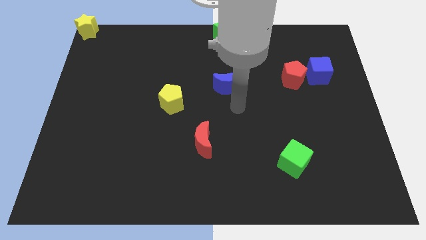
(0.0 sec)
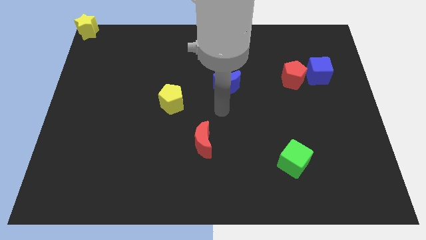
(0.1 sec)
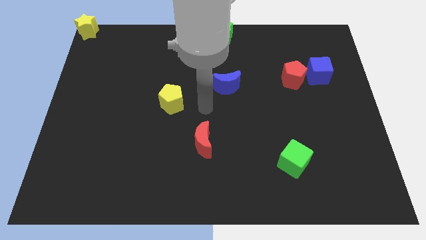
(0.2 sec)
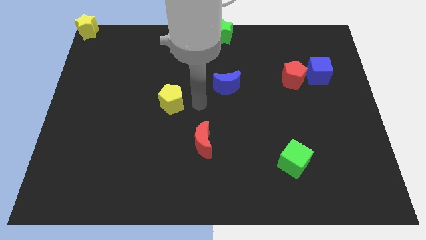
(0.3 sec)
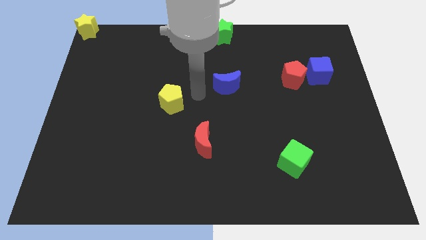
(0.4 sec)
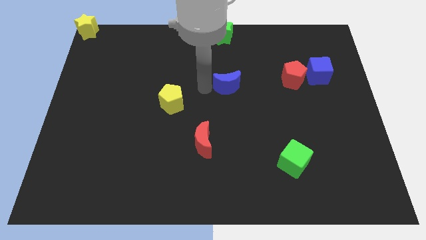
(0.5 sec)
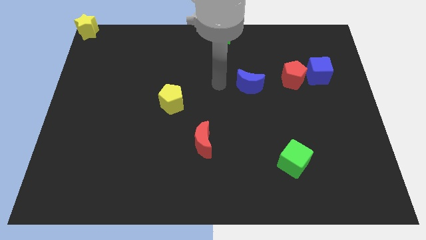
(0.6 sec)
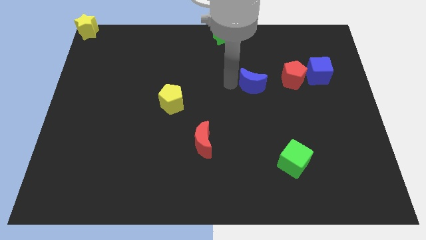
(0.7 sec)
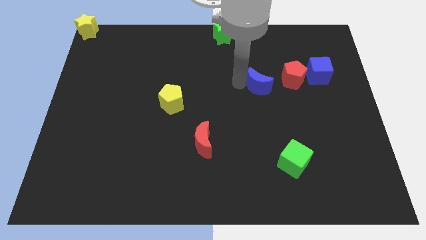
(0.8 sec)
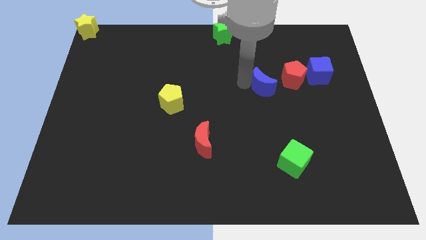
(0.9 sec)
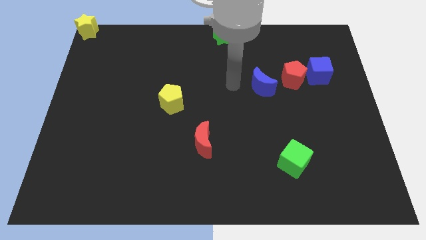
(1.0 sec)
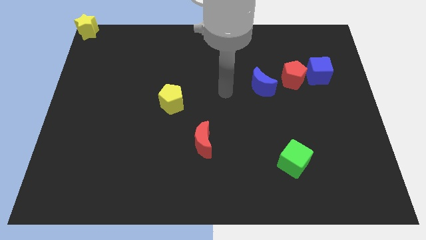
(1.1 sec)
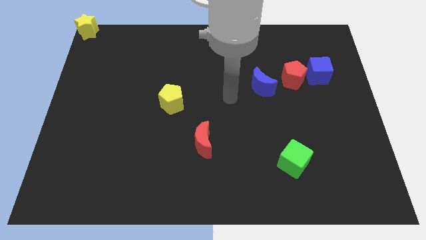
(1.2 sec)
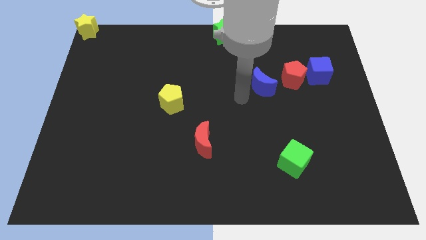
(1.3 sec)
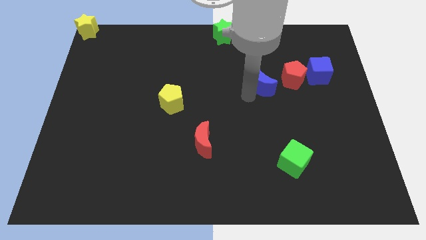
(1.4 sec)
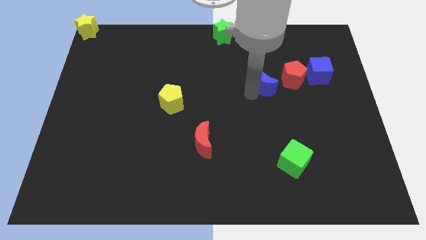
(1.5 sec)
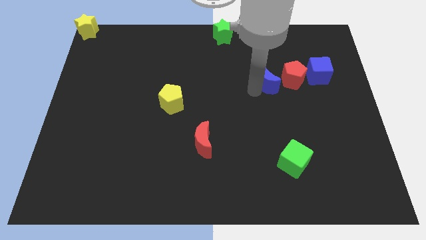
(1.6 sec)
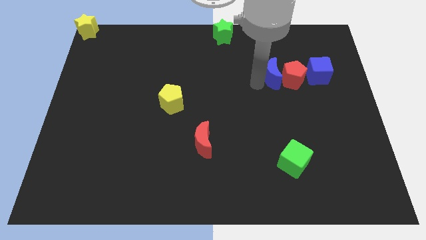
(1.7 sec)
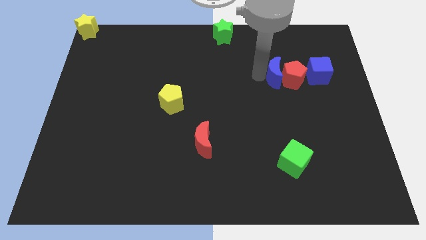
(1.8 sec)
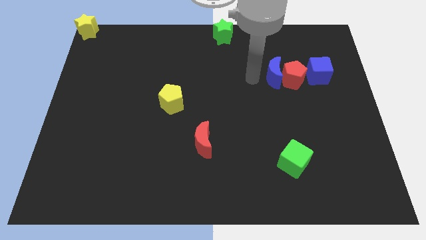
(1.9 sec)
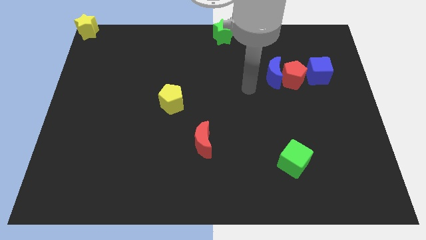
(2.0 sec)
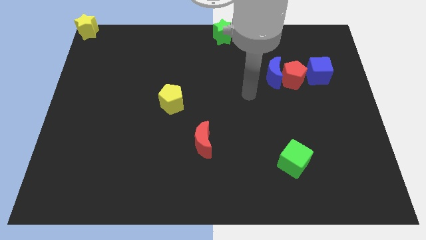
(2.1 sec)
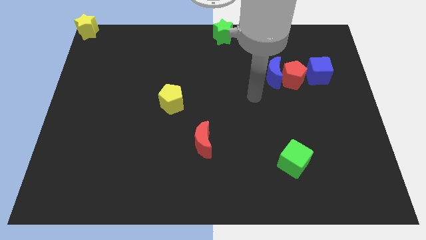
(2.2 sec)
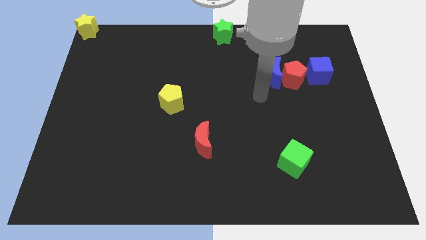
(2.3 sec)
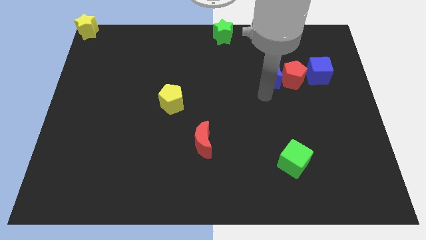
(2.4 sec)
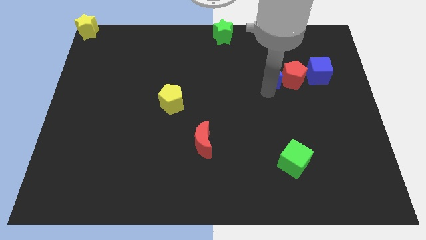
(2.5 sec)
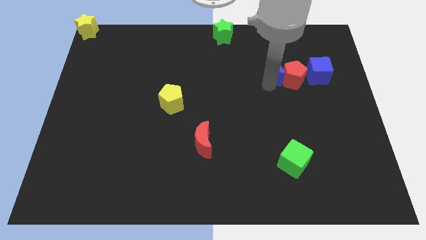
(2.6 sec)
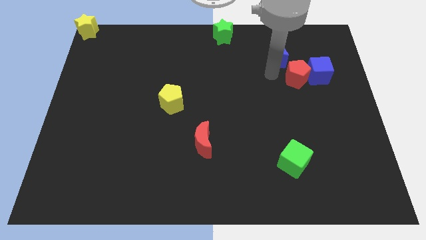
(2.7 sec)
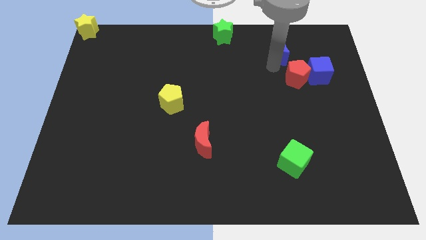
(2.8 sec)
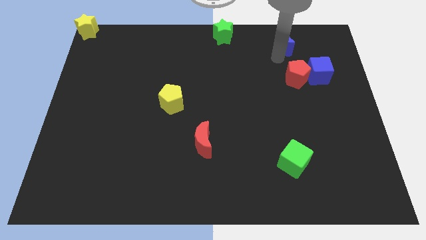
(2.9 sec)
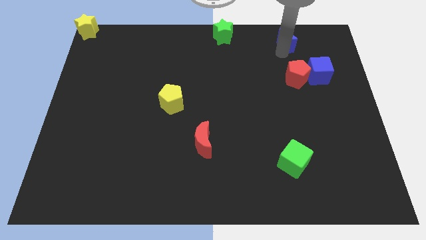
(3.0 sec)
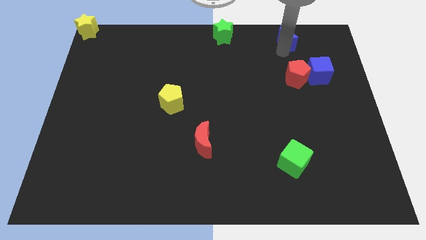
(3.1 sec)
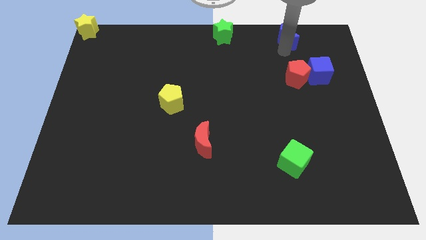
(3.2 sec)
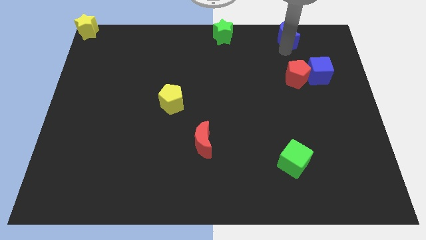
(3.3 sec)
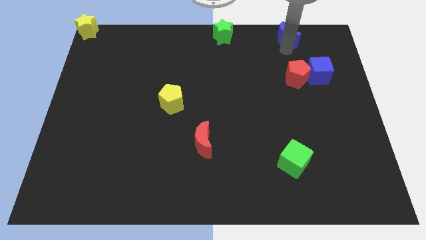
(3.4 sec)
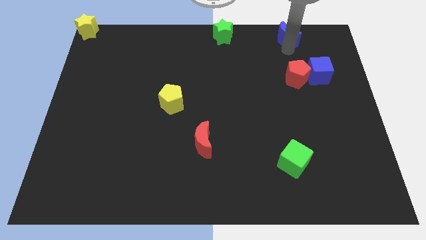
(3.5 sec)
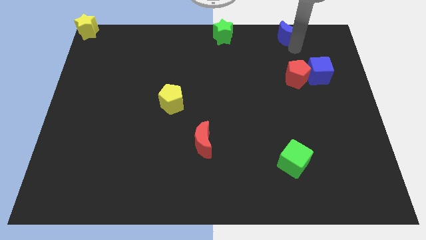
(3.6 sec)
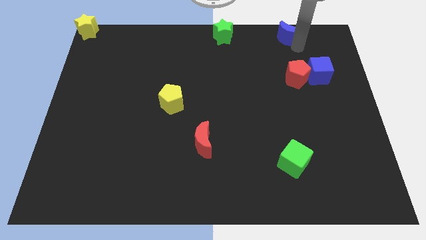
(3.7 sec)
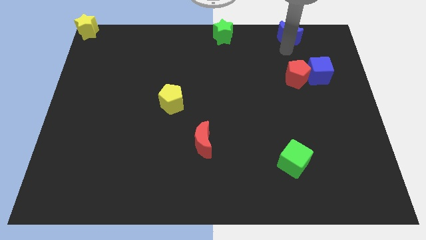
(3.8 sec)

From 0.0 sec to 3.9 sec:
place the blue moon above the red pentagon

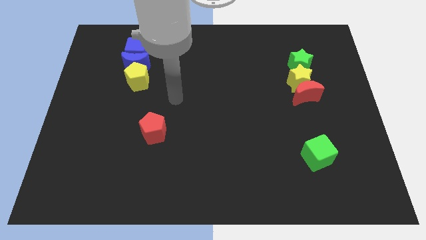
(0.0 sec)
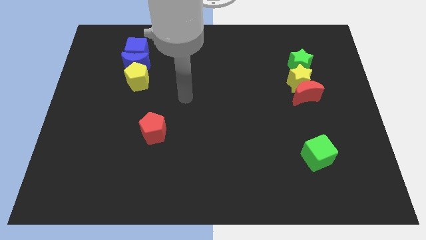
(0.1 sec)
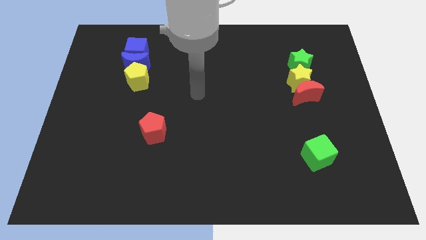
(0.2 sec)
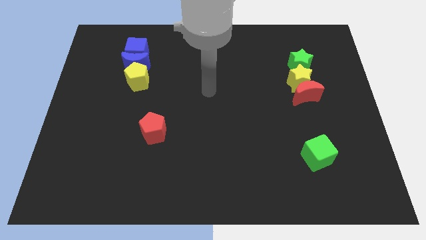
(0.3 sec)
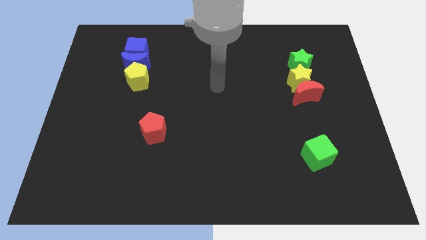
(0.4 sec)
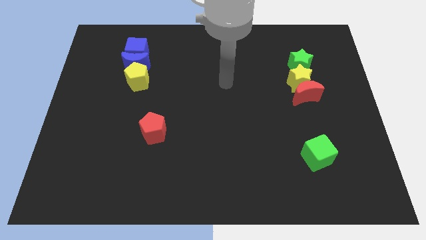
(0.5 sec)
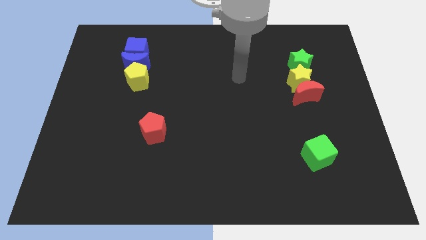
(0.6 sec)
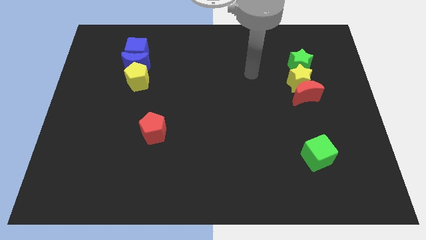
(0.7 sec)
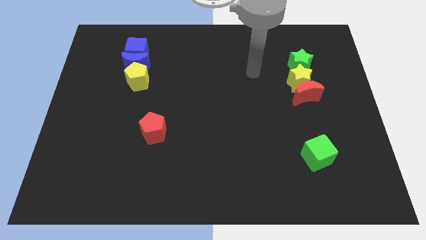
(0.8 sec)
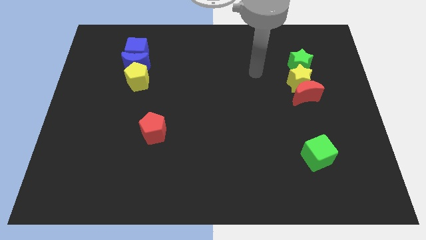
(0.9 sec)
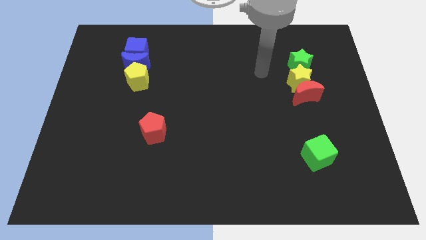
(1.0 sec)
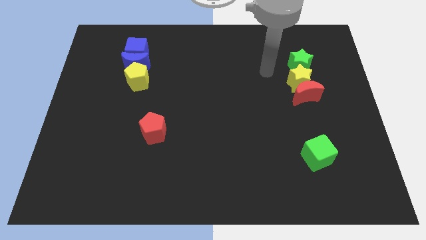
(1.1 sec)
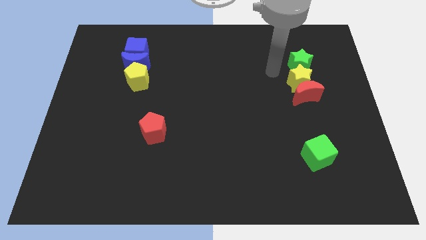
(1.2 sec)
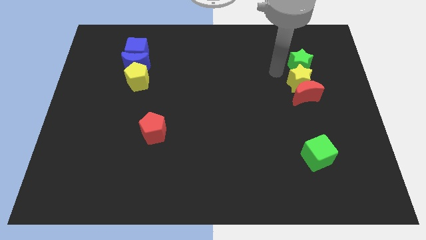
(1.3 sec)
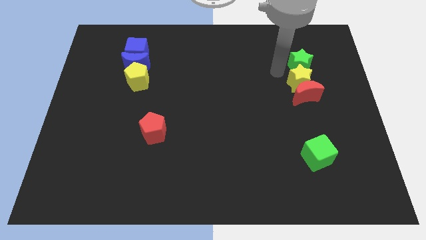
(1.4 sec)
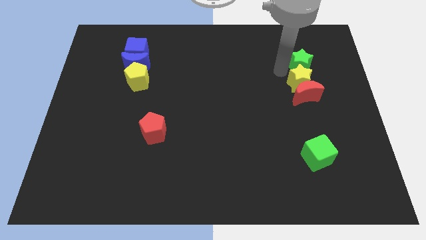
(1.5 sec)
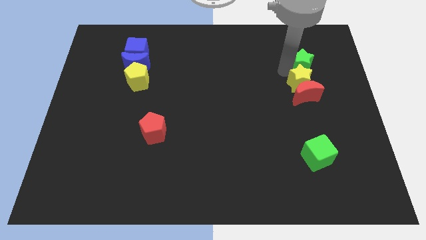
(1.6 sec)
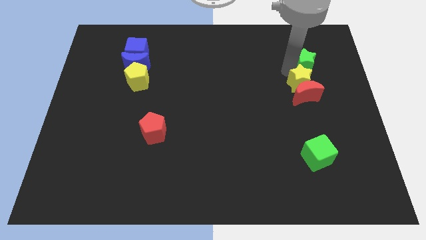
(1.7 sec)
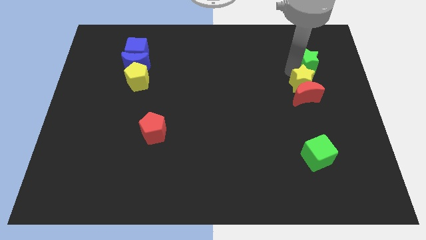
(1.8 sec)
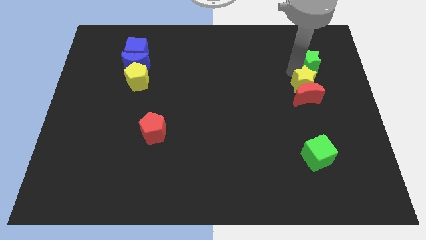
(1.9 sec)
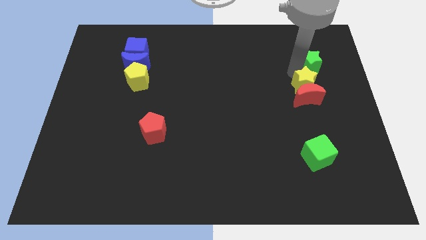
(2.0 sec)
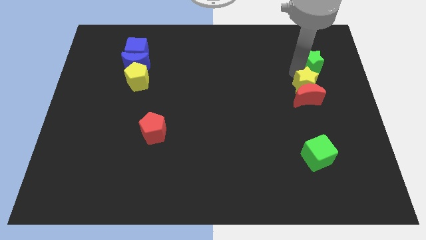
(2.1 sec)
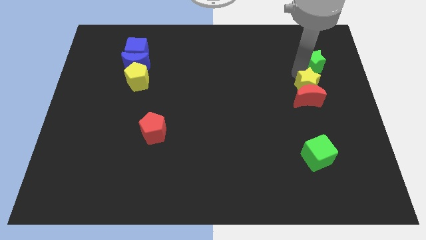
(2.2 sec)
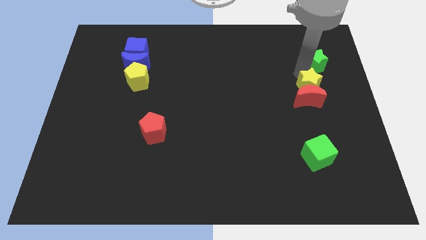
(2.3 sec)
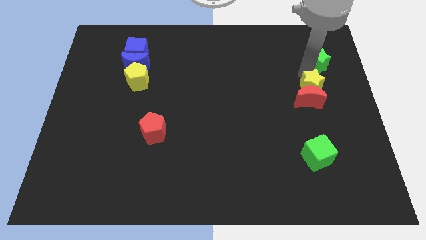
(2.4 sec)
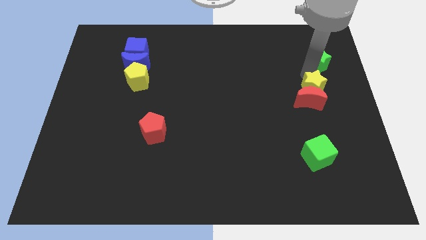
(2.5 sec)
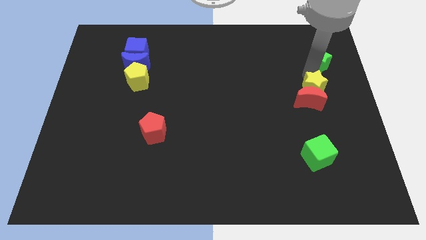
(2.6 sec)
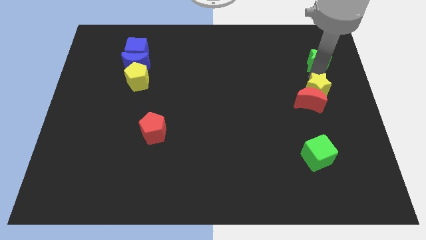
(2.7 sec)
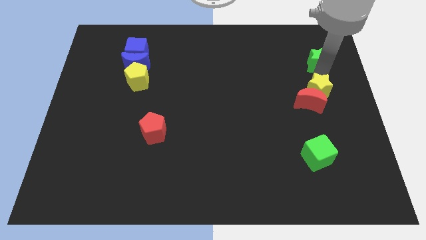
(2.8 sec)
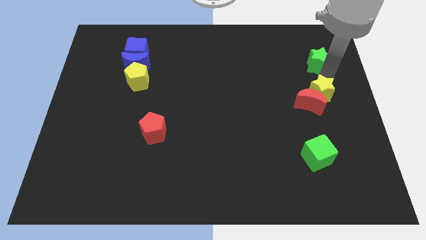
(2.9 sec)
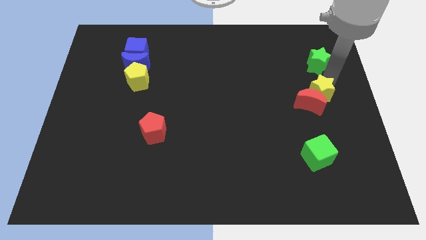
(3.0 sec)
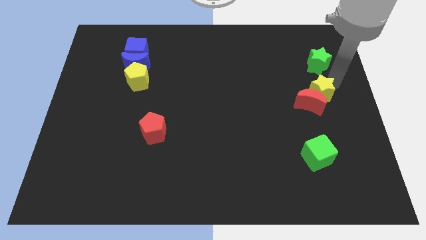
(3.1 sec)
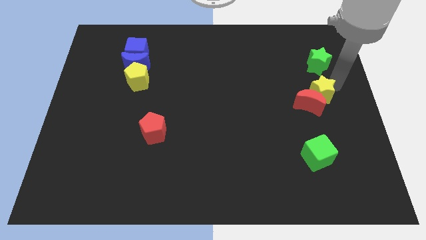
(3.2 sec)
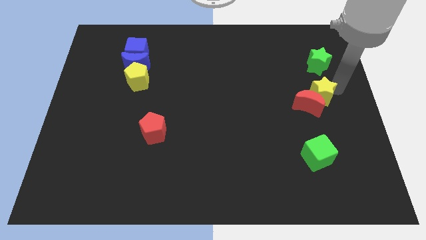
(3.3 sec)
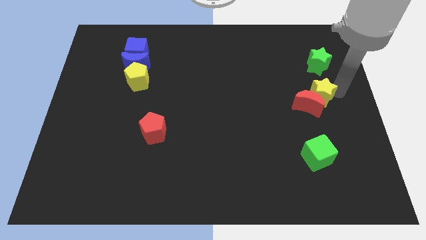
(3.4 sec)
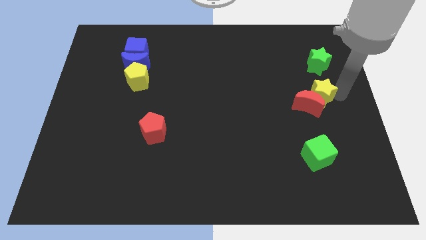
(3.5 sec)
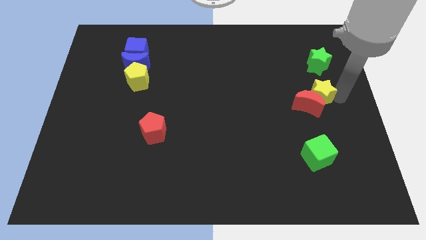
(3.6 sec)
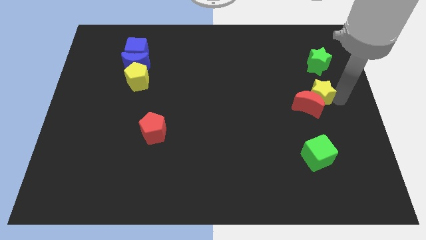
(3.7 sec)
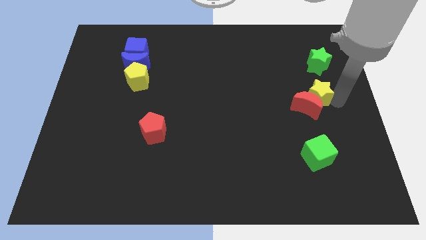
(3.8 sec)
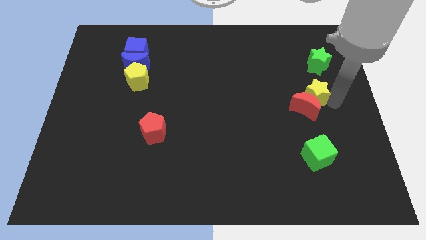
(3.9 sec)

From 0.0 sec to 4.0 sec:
separate the green star and the yellow star

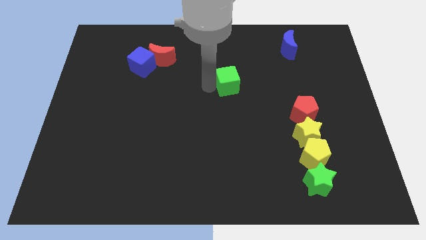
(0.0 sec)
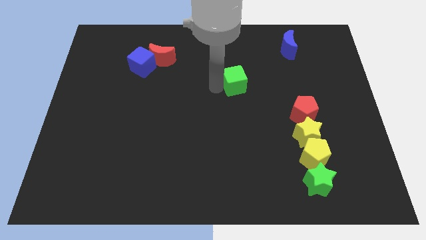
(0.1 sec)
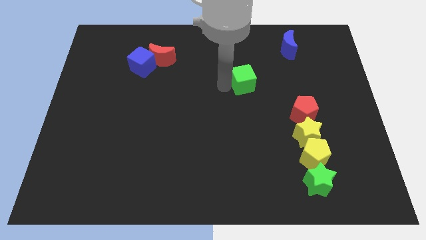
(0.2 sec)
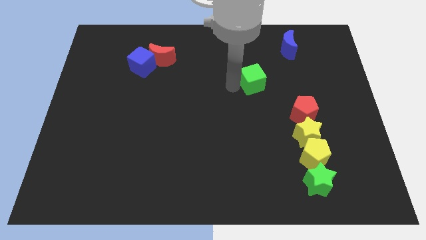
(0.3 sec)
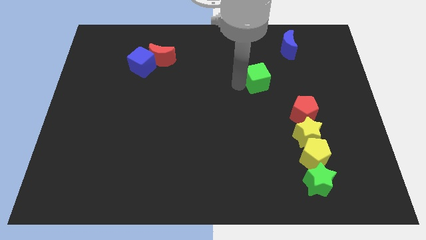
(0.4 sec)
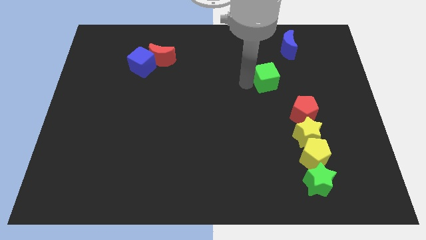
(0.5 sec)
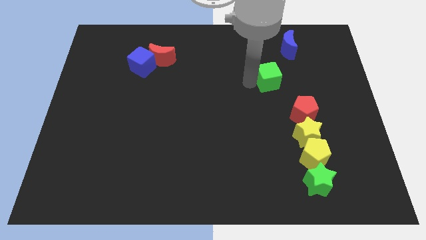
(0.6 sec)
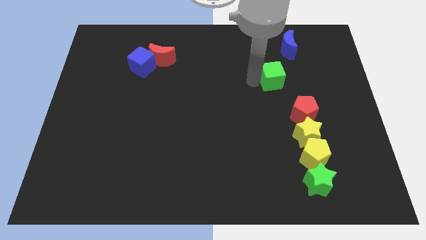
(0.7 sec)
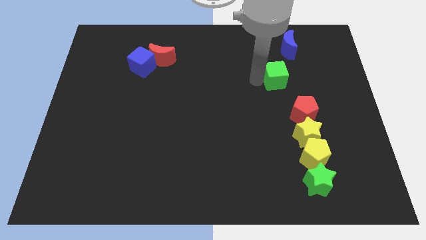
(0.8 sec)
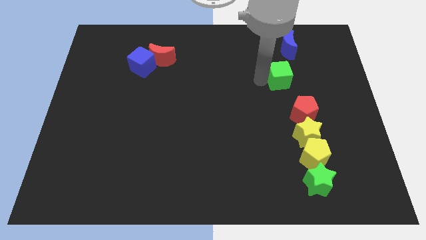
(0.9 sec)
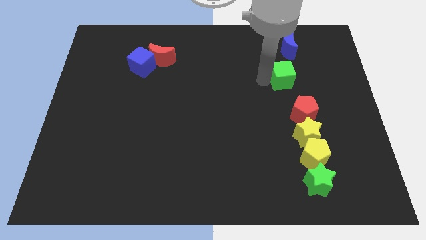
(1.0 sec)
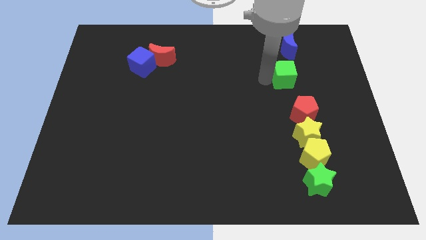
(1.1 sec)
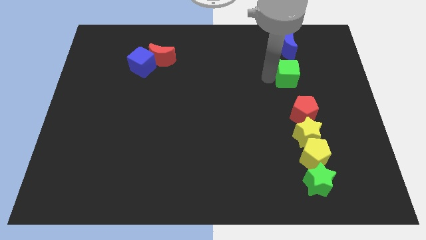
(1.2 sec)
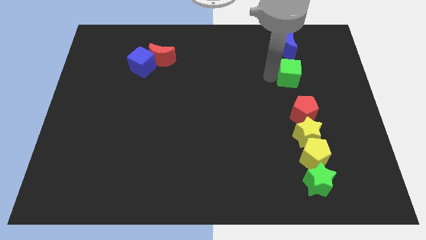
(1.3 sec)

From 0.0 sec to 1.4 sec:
push the green cube towards the bottom of the blue crescent
